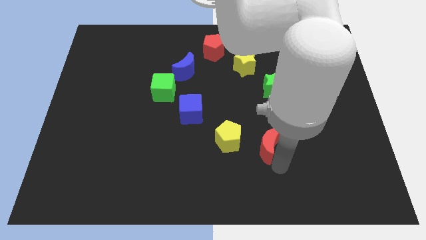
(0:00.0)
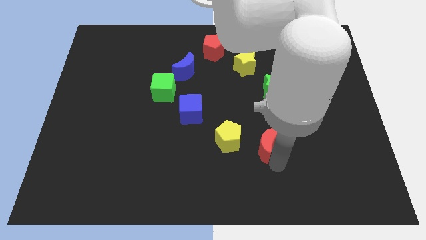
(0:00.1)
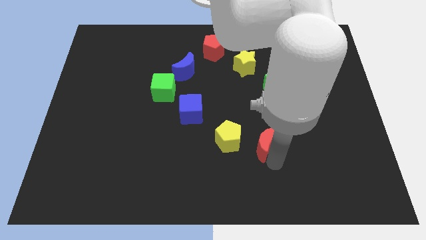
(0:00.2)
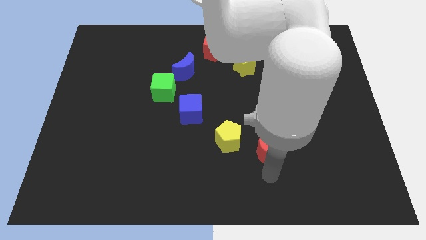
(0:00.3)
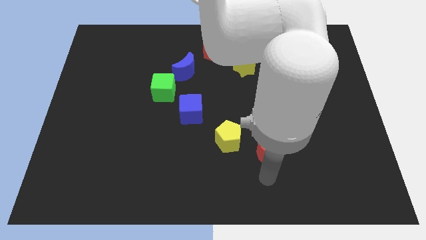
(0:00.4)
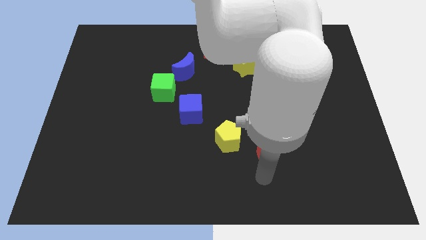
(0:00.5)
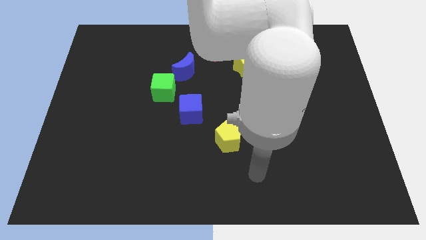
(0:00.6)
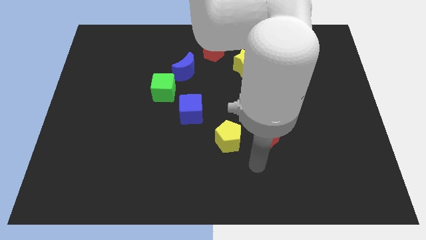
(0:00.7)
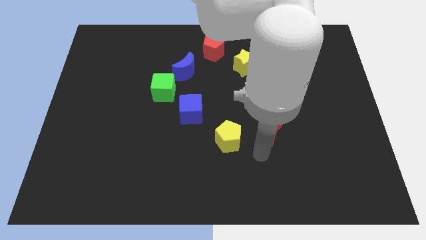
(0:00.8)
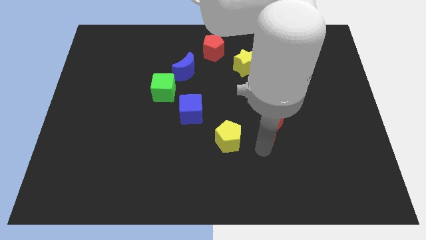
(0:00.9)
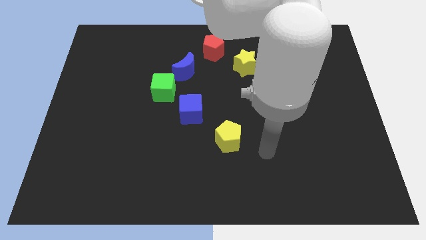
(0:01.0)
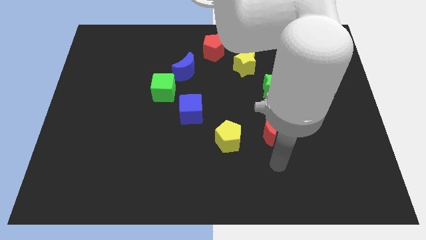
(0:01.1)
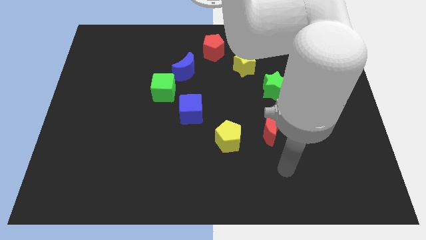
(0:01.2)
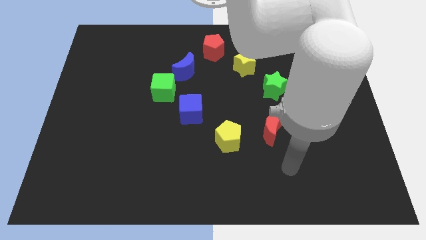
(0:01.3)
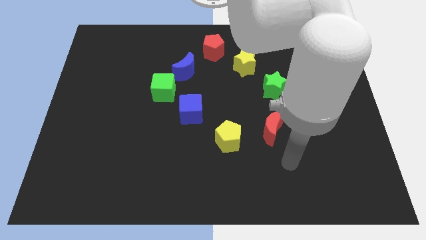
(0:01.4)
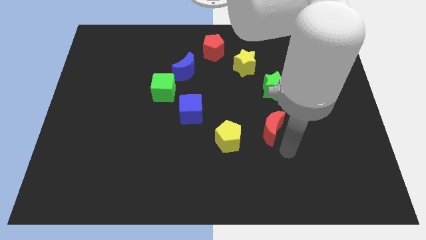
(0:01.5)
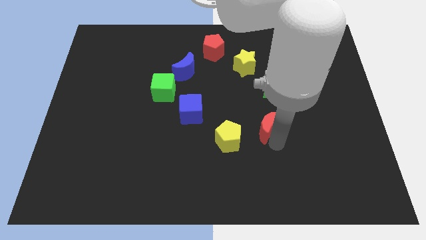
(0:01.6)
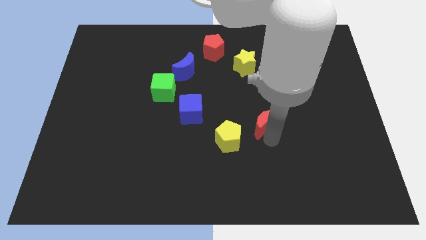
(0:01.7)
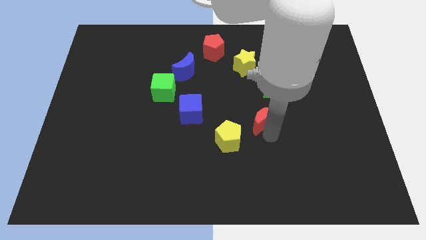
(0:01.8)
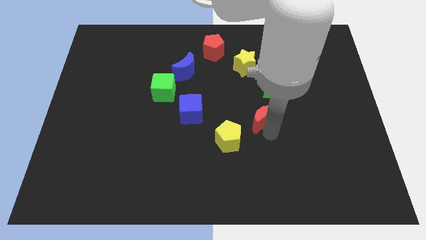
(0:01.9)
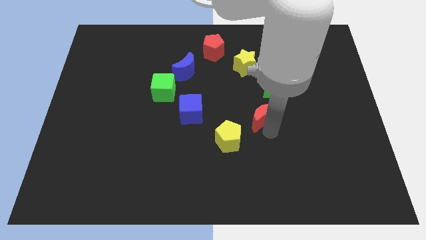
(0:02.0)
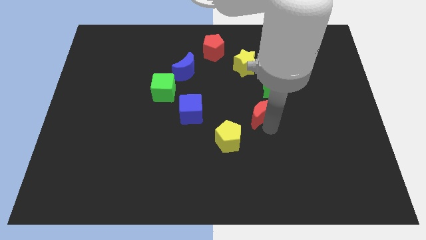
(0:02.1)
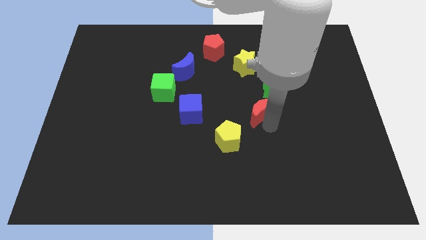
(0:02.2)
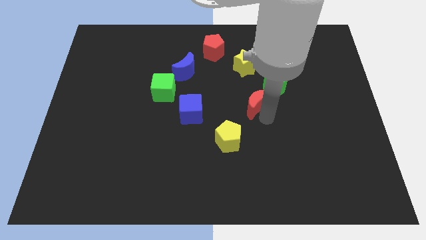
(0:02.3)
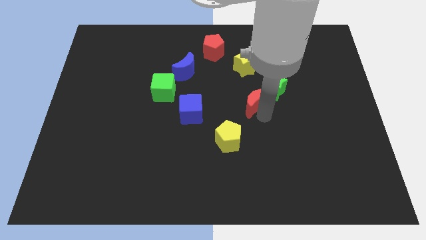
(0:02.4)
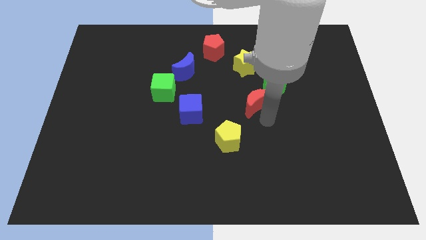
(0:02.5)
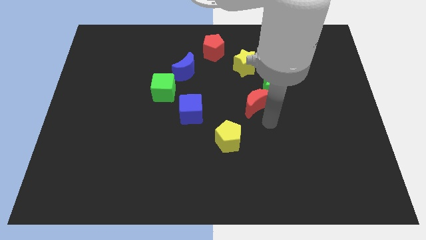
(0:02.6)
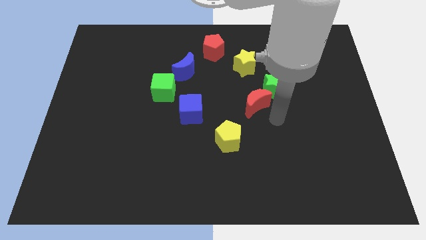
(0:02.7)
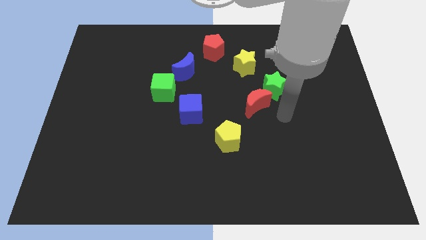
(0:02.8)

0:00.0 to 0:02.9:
slide the red moon diagonally to the top right of the yellow pentagon

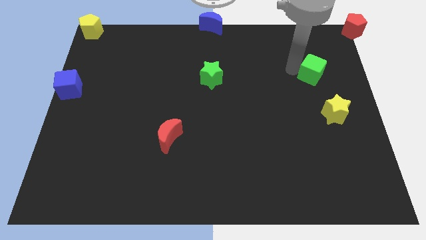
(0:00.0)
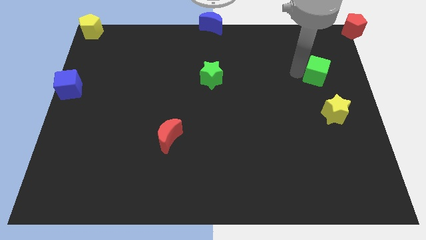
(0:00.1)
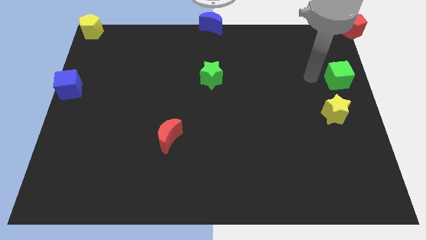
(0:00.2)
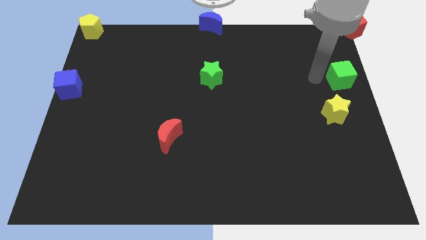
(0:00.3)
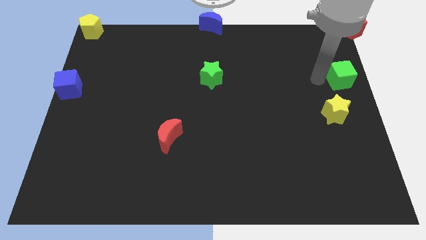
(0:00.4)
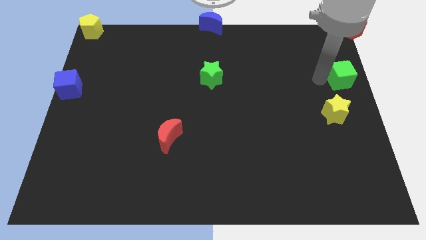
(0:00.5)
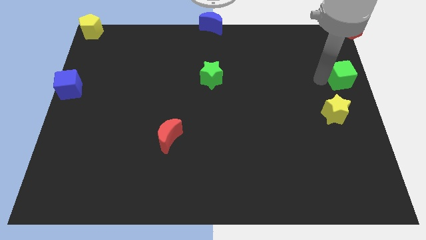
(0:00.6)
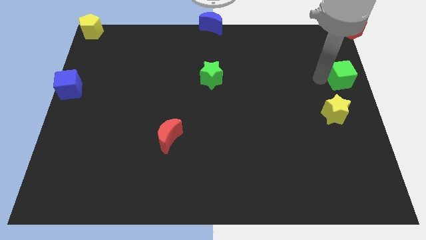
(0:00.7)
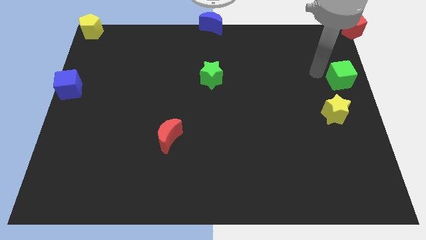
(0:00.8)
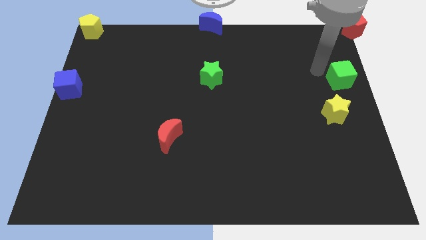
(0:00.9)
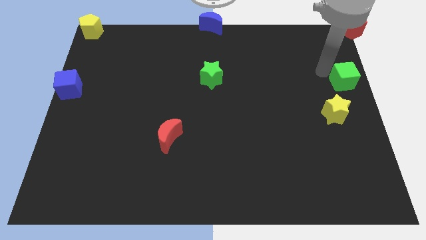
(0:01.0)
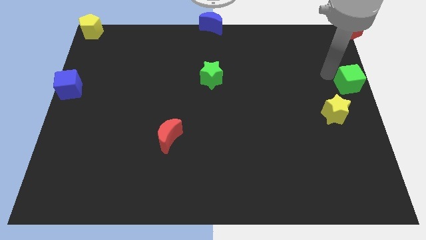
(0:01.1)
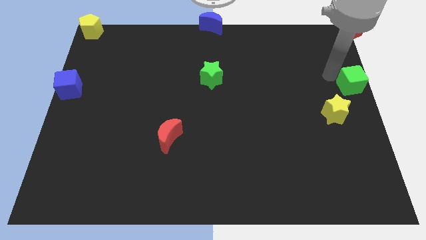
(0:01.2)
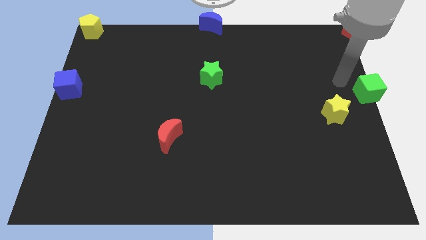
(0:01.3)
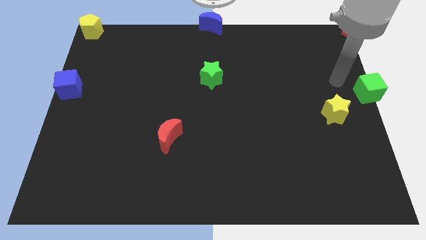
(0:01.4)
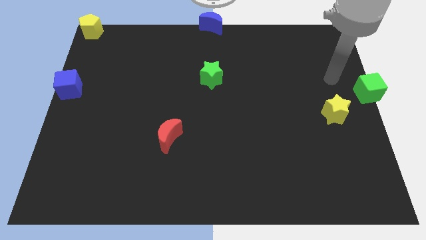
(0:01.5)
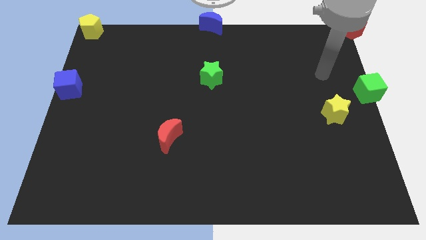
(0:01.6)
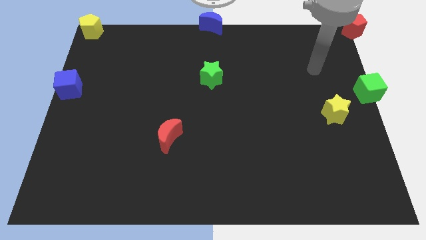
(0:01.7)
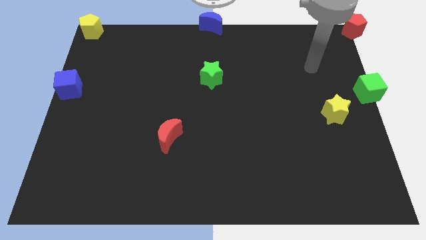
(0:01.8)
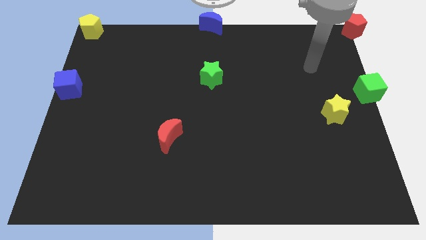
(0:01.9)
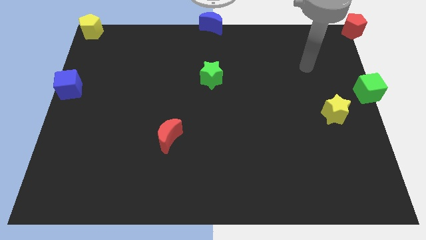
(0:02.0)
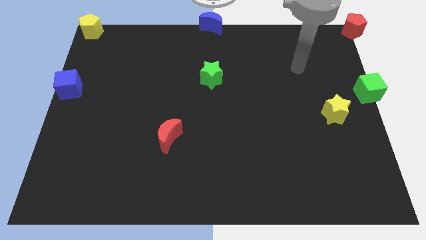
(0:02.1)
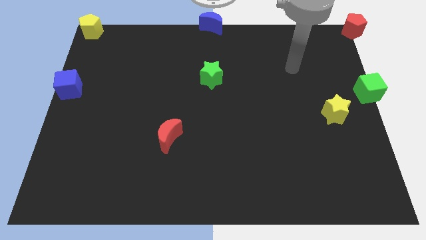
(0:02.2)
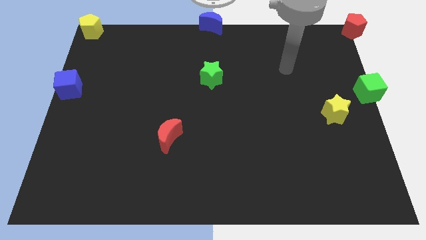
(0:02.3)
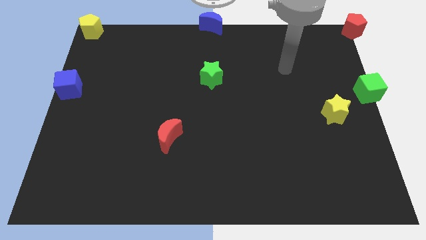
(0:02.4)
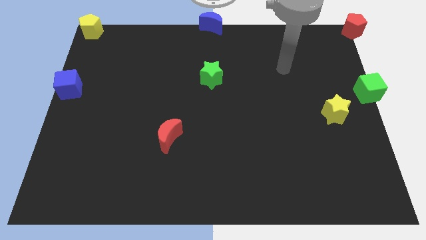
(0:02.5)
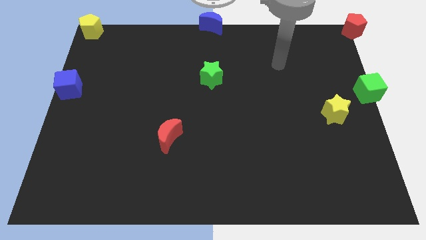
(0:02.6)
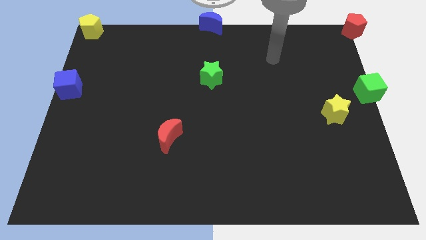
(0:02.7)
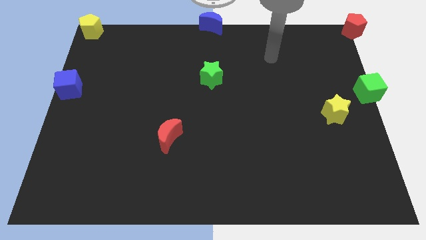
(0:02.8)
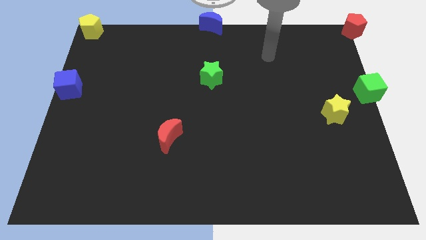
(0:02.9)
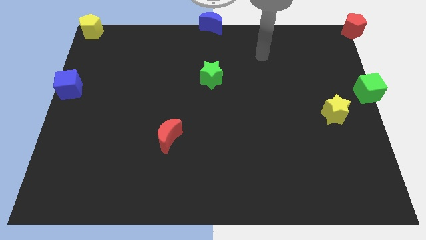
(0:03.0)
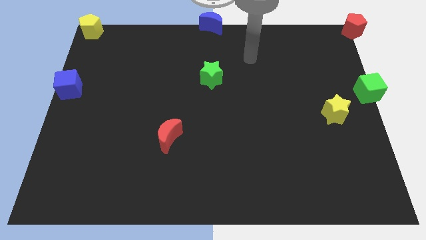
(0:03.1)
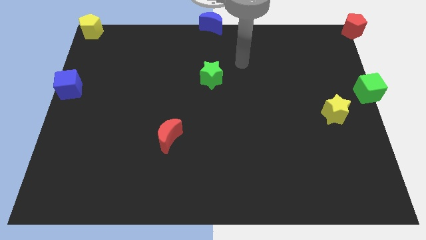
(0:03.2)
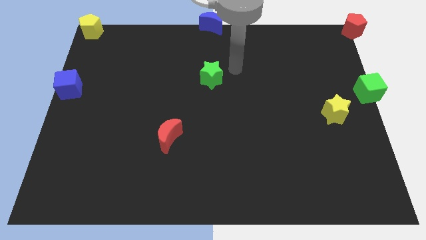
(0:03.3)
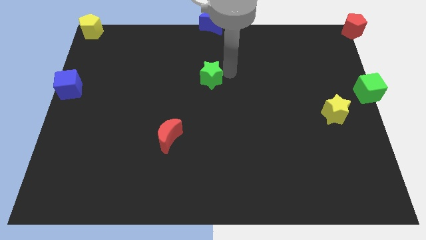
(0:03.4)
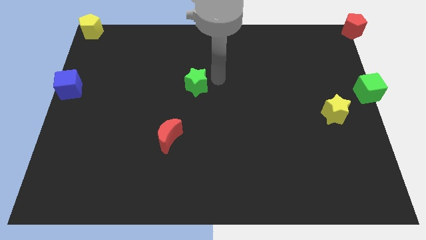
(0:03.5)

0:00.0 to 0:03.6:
slide the green cube below the red pentagon

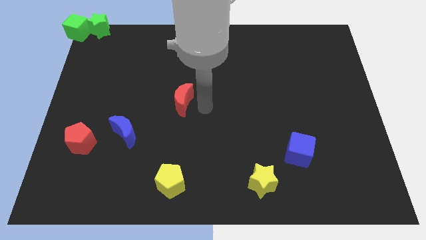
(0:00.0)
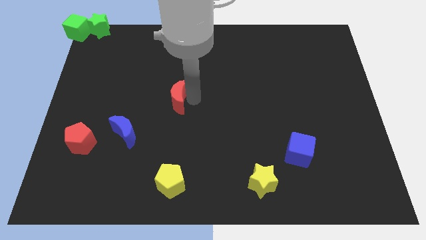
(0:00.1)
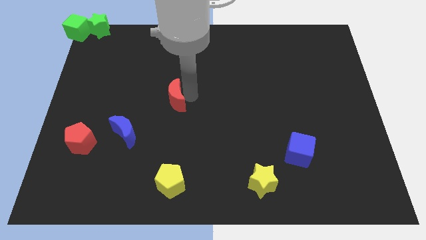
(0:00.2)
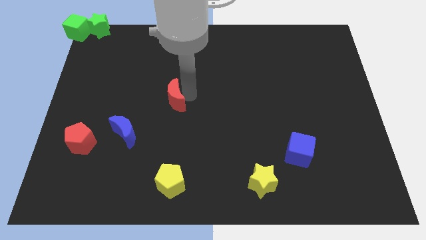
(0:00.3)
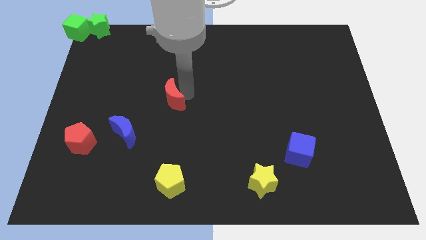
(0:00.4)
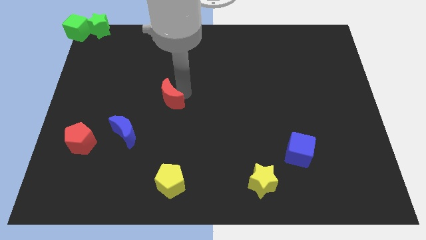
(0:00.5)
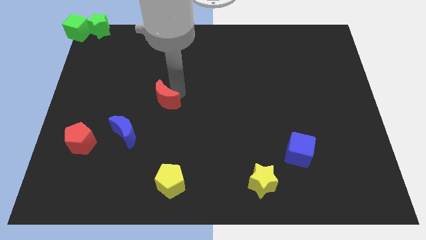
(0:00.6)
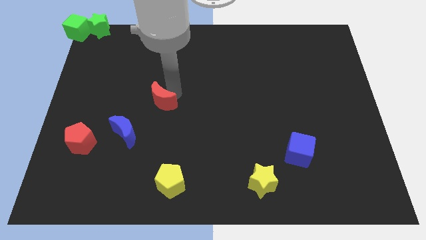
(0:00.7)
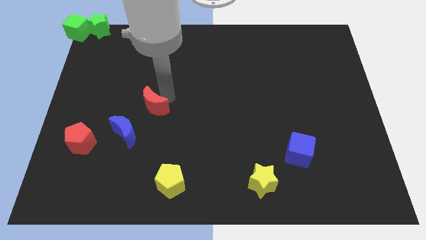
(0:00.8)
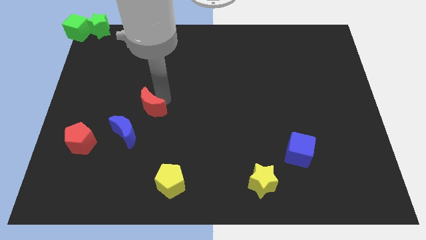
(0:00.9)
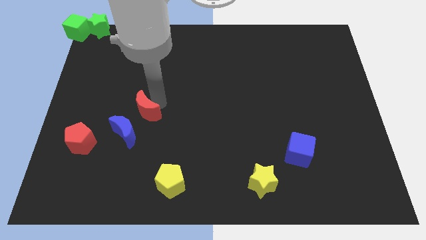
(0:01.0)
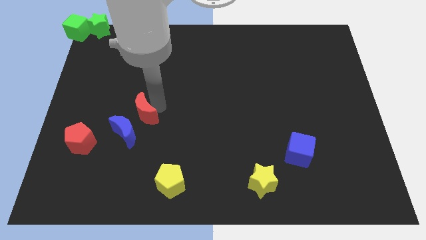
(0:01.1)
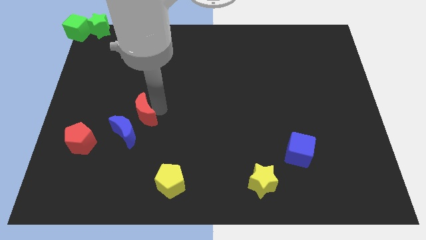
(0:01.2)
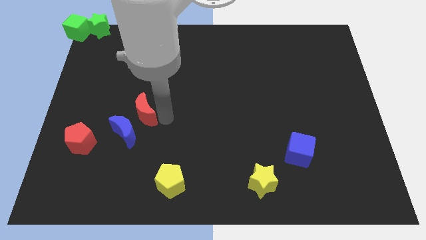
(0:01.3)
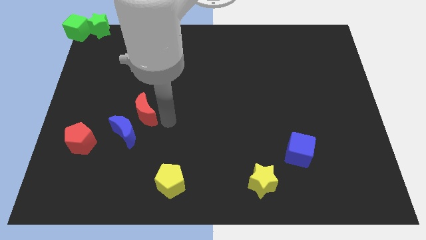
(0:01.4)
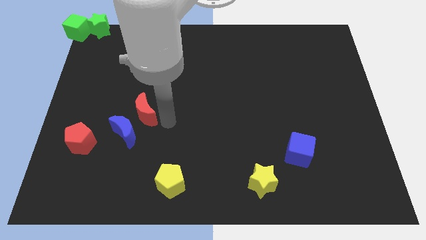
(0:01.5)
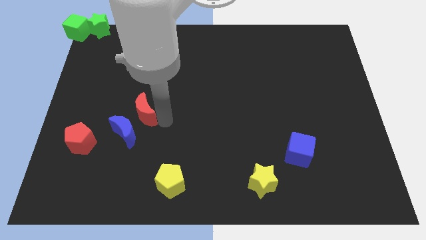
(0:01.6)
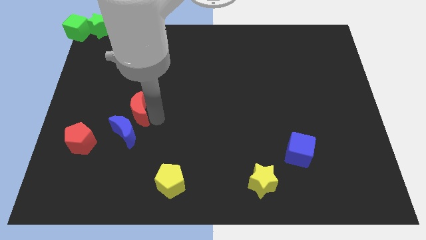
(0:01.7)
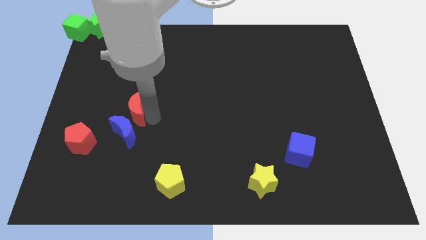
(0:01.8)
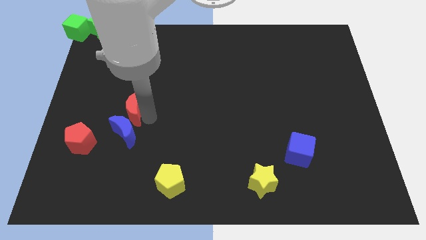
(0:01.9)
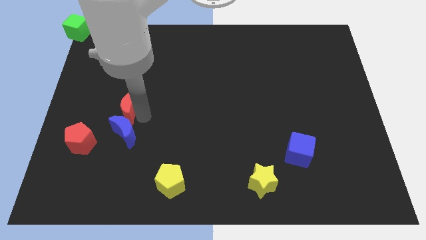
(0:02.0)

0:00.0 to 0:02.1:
move the red moon on the top of the blue moon

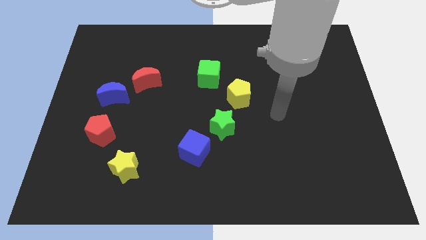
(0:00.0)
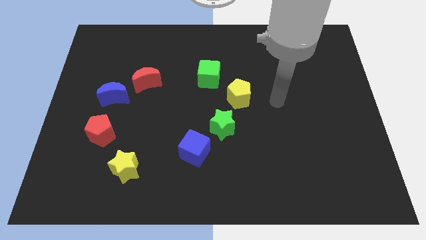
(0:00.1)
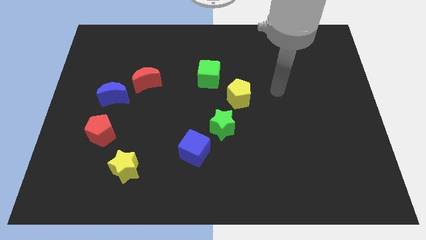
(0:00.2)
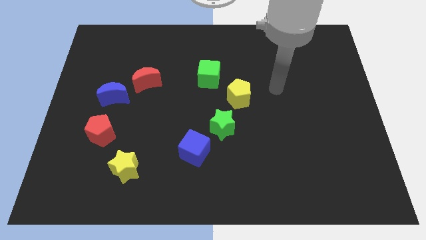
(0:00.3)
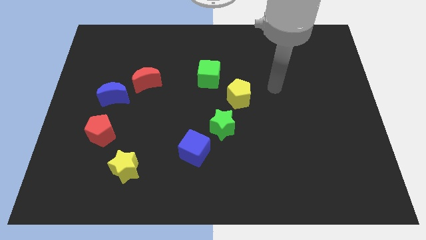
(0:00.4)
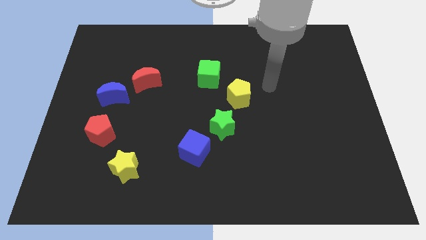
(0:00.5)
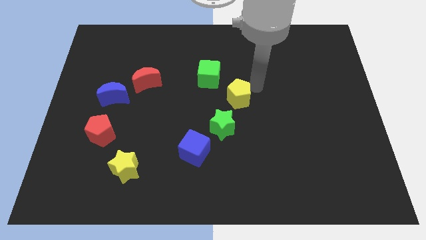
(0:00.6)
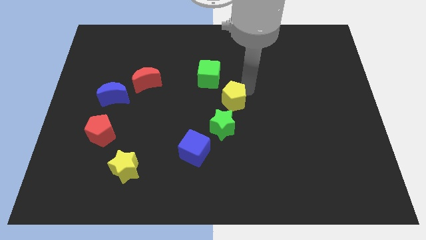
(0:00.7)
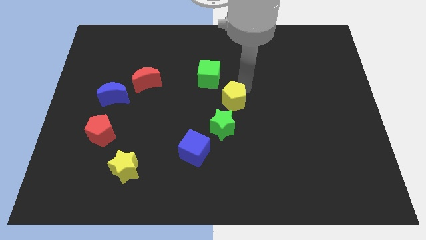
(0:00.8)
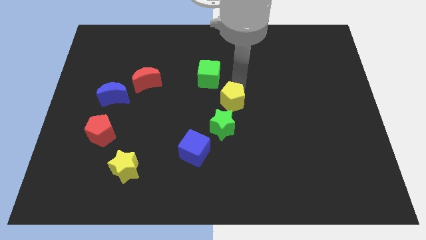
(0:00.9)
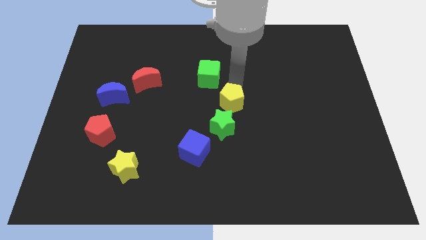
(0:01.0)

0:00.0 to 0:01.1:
move the yellow pentagon towards the green star
